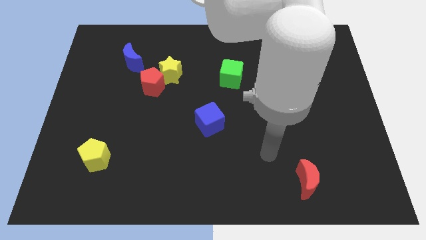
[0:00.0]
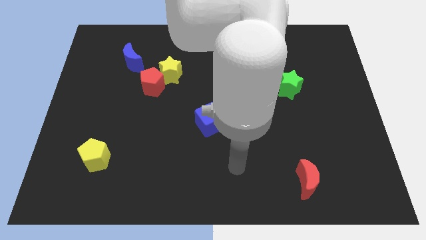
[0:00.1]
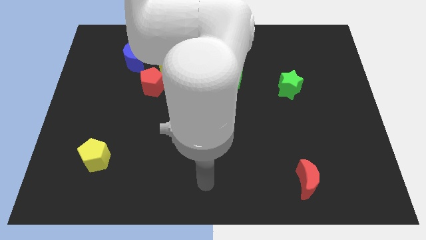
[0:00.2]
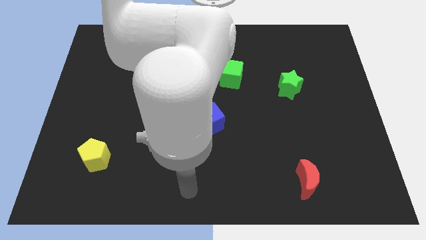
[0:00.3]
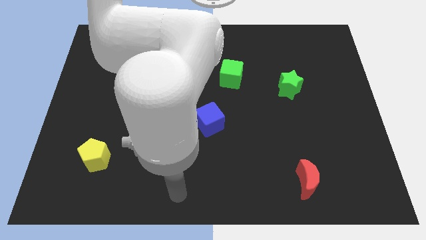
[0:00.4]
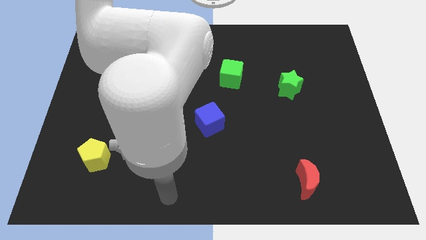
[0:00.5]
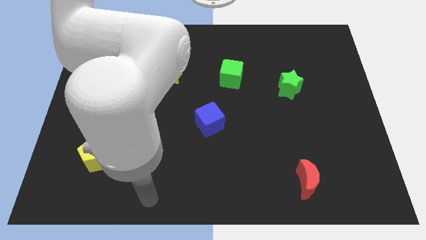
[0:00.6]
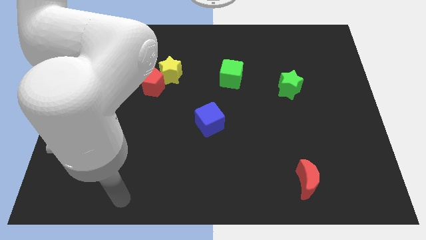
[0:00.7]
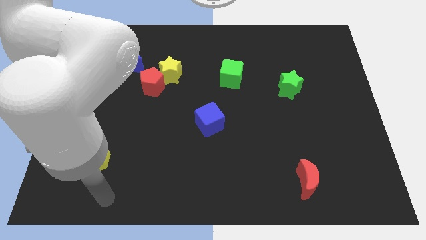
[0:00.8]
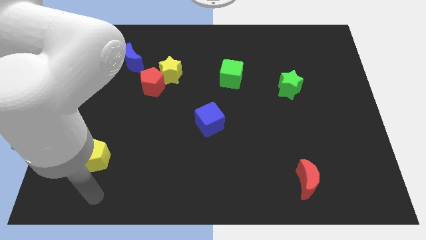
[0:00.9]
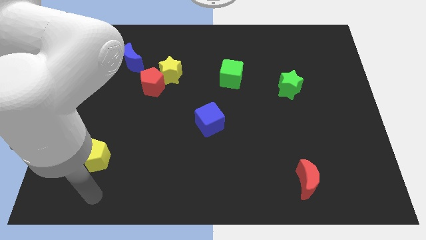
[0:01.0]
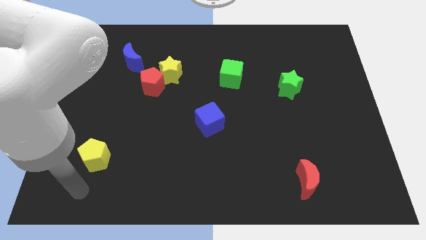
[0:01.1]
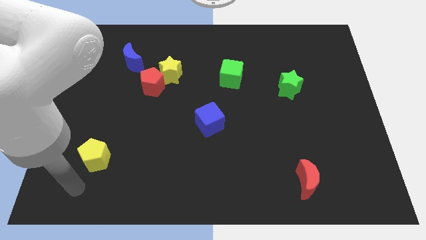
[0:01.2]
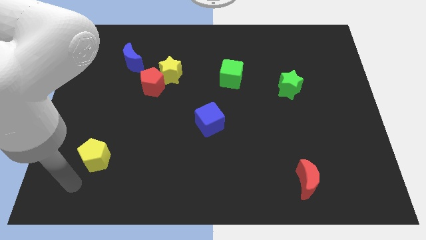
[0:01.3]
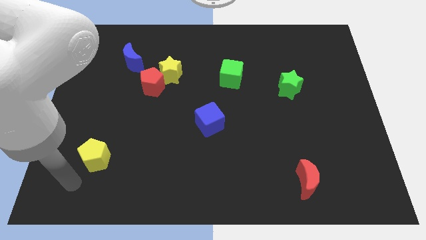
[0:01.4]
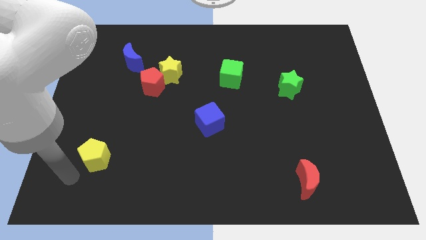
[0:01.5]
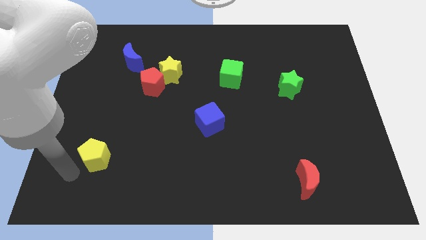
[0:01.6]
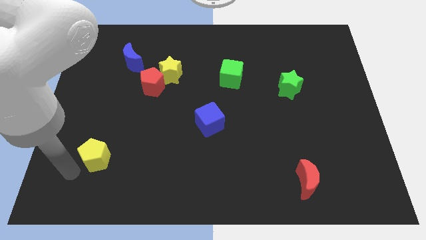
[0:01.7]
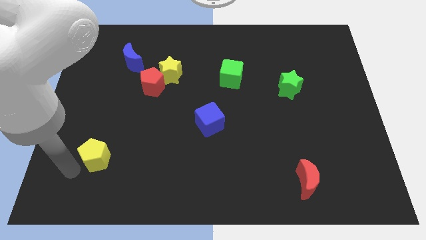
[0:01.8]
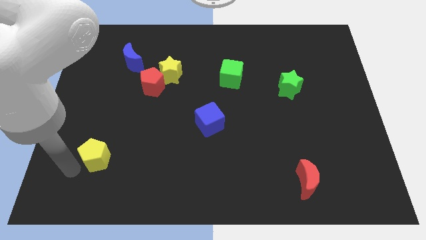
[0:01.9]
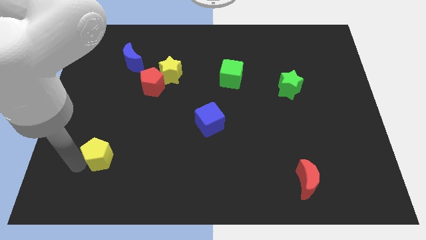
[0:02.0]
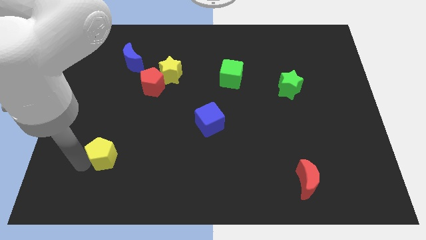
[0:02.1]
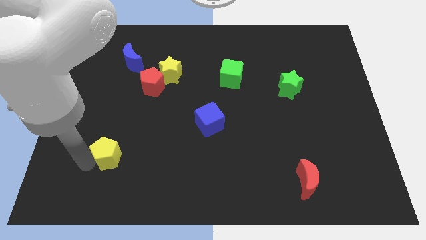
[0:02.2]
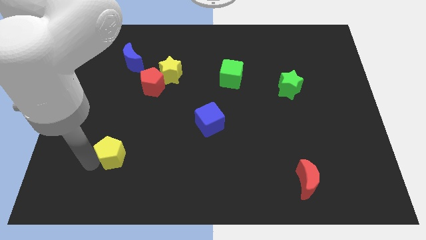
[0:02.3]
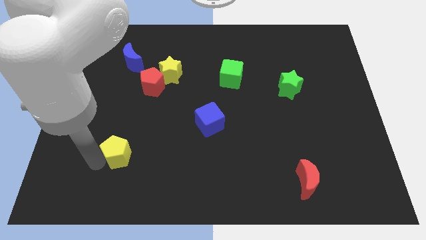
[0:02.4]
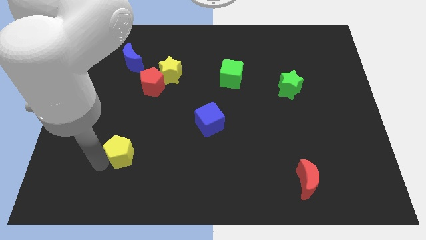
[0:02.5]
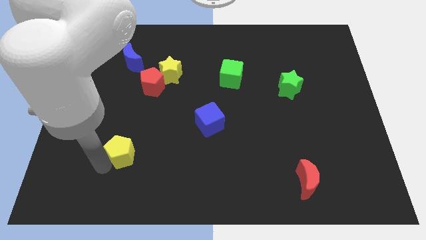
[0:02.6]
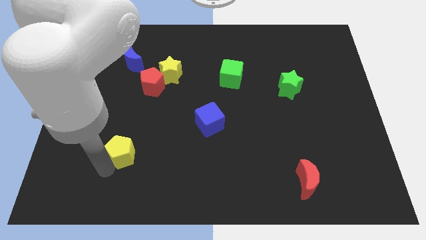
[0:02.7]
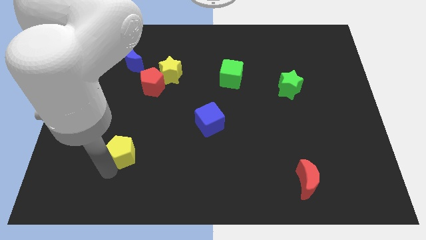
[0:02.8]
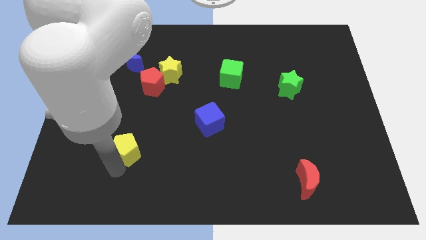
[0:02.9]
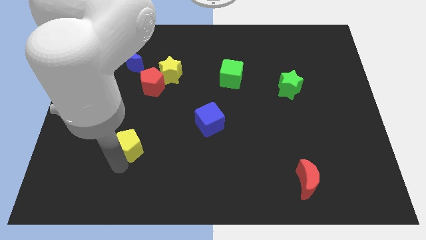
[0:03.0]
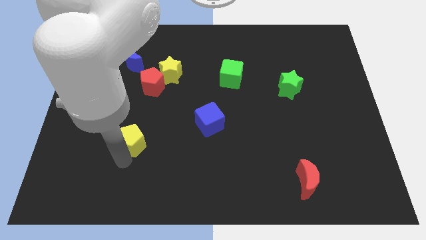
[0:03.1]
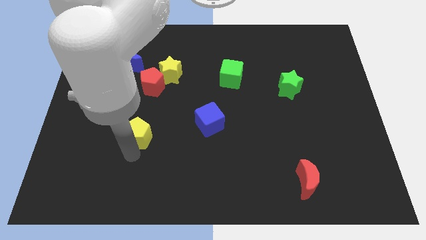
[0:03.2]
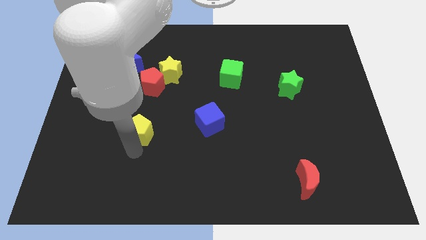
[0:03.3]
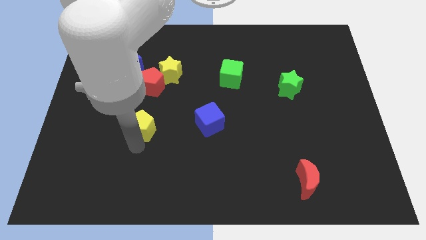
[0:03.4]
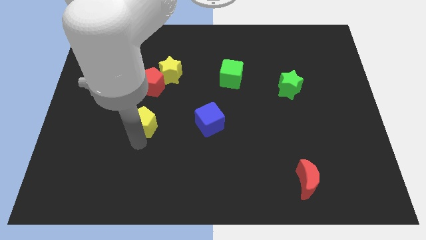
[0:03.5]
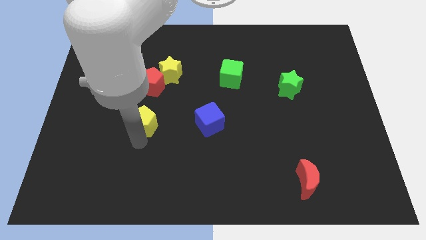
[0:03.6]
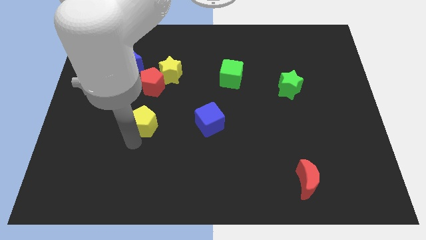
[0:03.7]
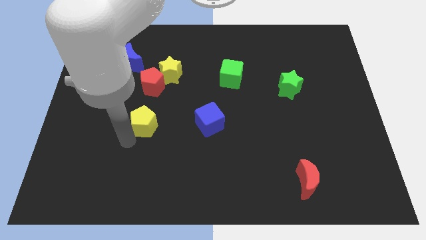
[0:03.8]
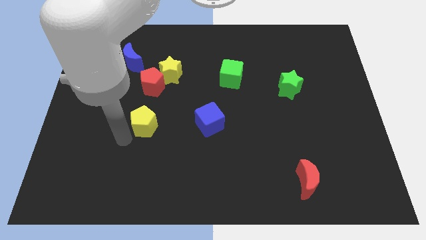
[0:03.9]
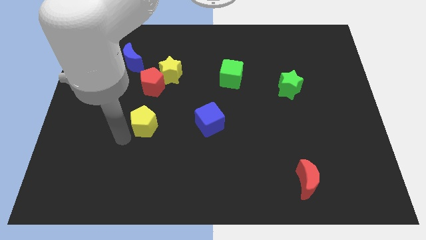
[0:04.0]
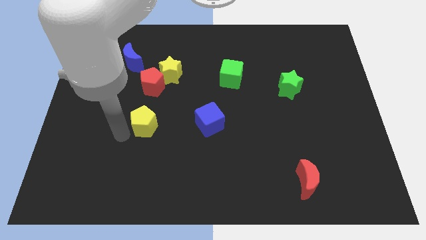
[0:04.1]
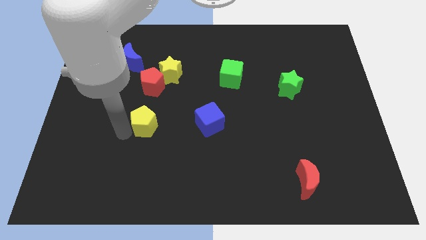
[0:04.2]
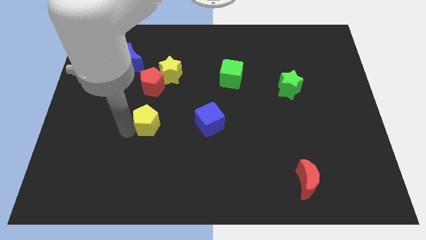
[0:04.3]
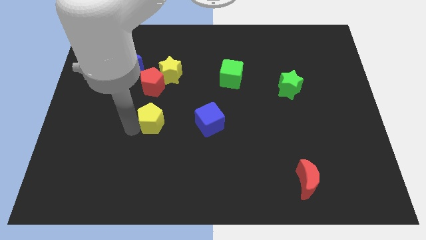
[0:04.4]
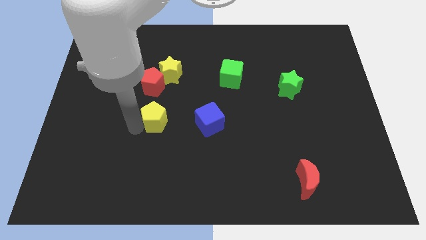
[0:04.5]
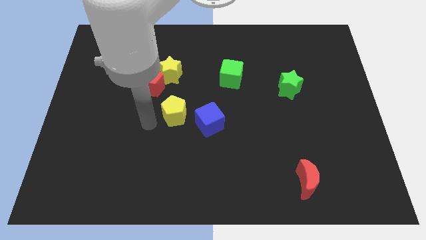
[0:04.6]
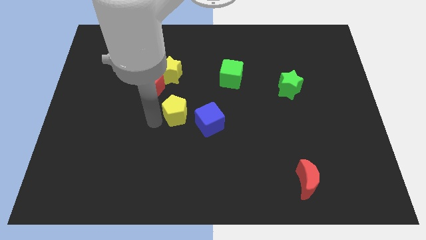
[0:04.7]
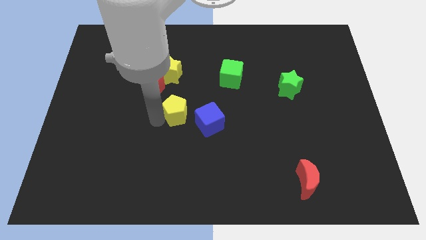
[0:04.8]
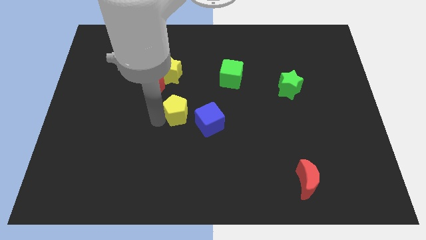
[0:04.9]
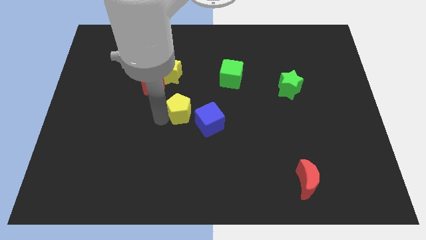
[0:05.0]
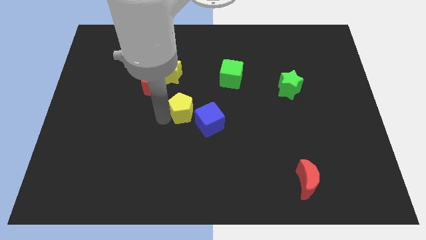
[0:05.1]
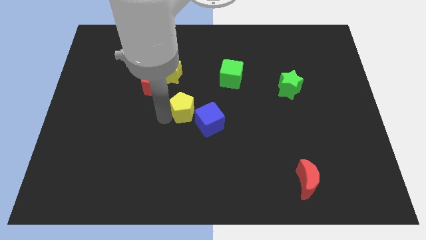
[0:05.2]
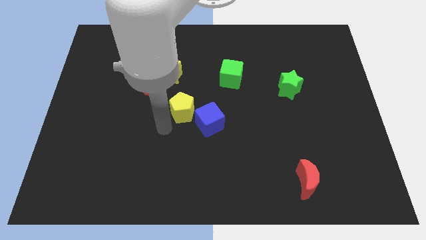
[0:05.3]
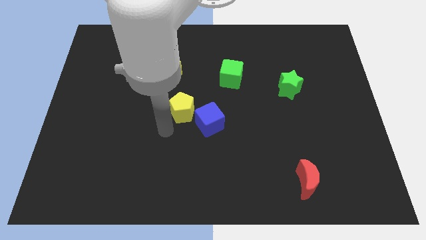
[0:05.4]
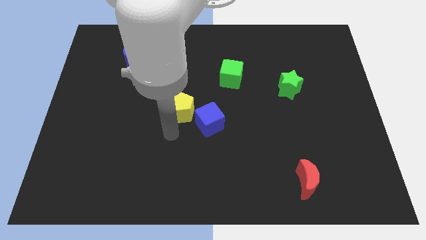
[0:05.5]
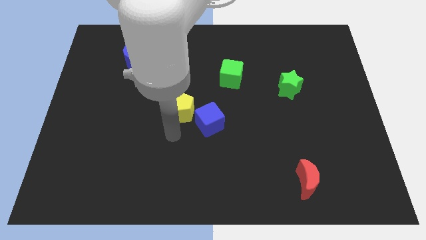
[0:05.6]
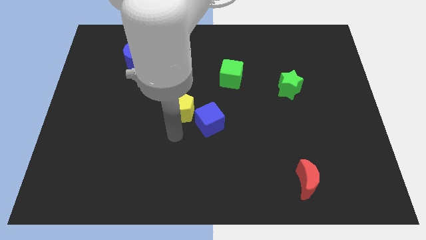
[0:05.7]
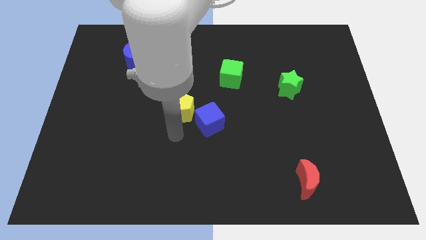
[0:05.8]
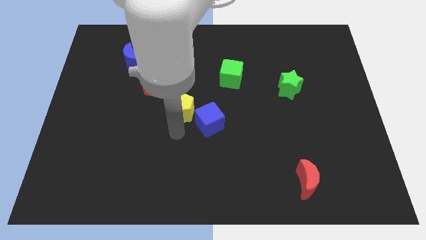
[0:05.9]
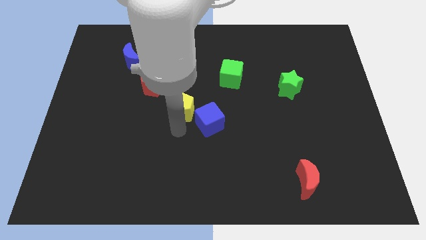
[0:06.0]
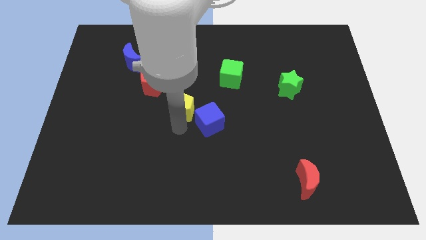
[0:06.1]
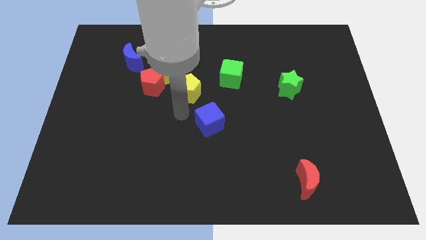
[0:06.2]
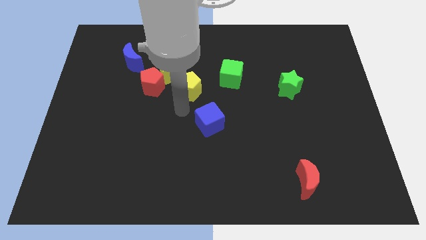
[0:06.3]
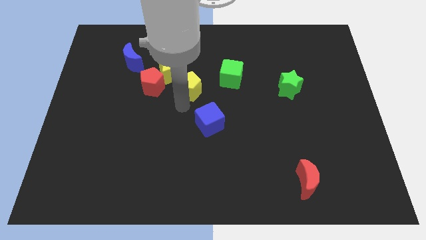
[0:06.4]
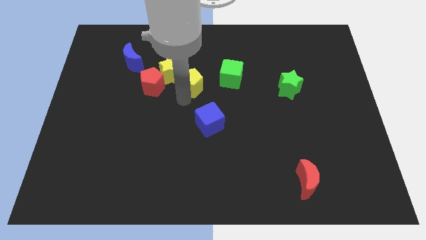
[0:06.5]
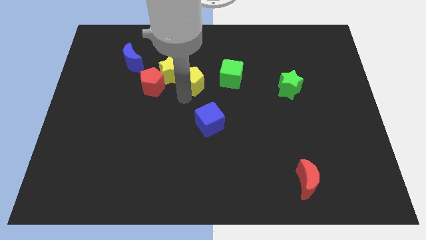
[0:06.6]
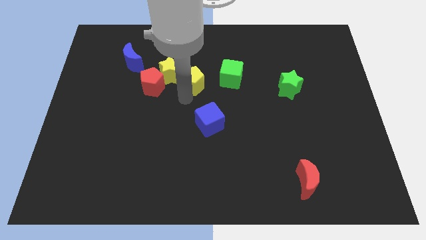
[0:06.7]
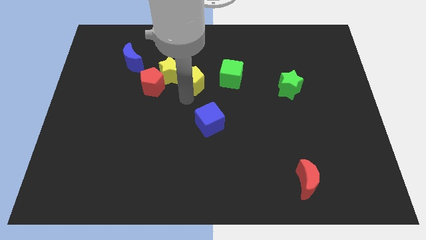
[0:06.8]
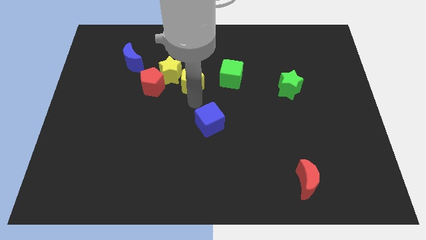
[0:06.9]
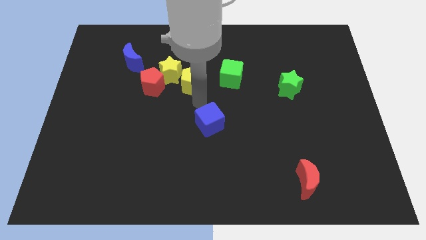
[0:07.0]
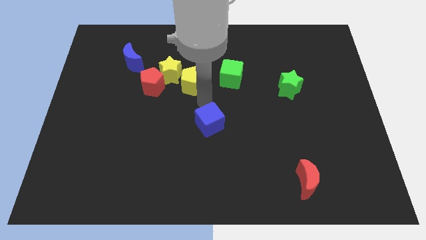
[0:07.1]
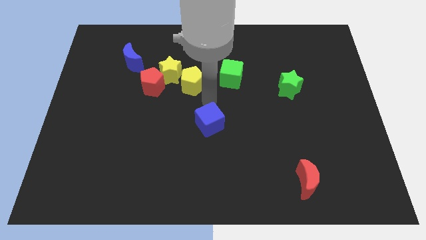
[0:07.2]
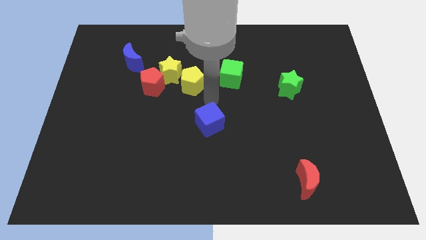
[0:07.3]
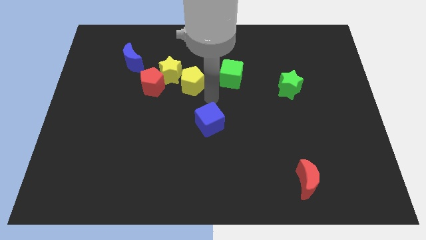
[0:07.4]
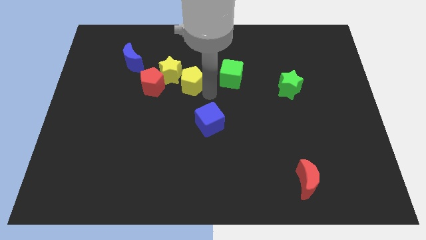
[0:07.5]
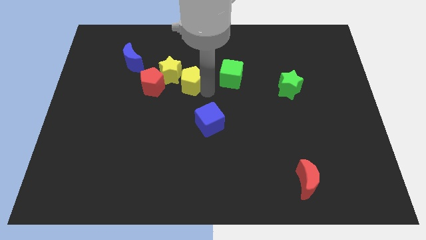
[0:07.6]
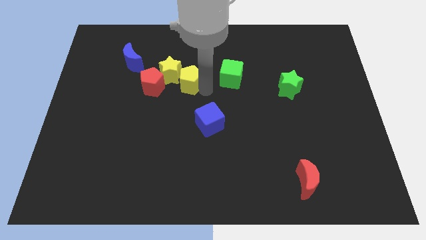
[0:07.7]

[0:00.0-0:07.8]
put the yellow pentagon next to the yellow star

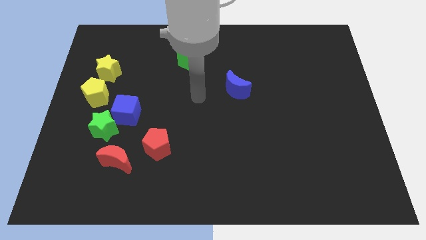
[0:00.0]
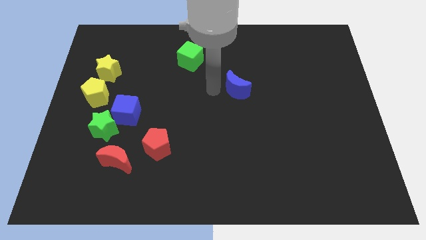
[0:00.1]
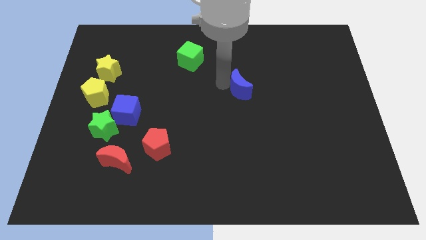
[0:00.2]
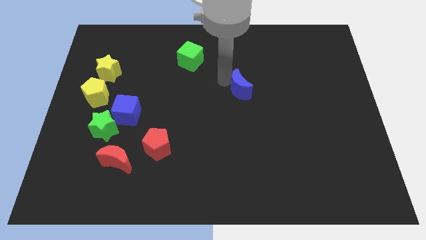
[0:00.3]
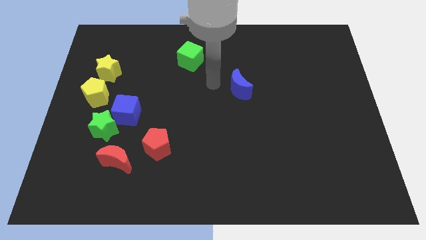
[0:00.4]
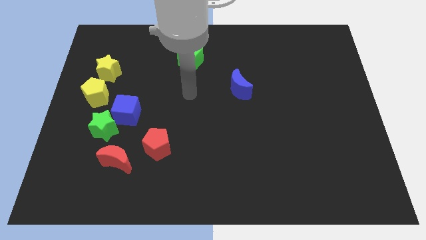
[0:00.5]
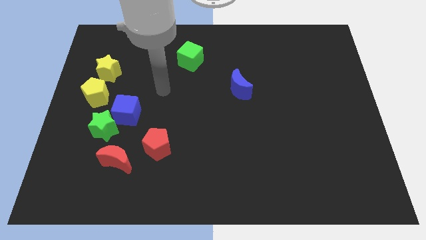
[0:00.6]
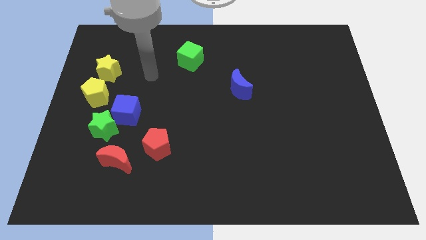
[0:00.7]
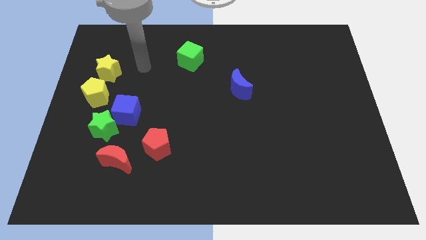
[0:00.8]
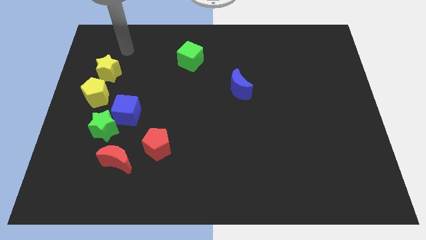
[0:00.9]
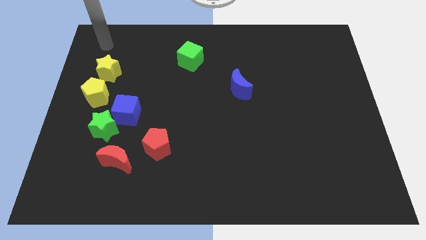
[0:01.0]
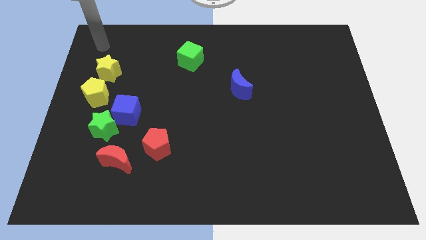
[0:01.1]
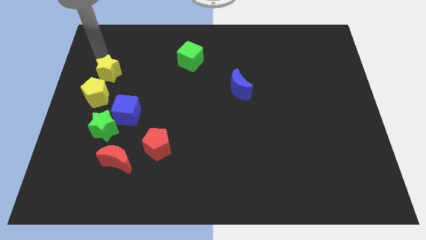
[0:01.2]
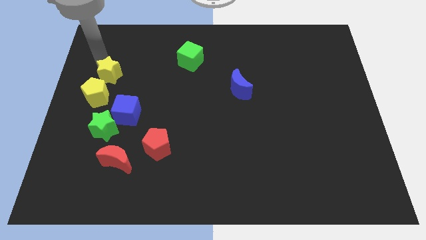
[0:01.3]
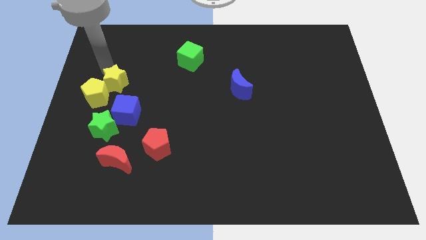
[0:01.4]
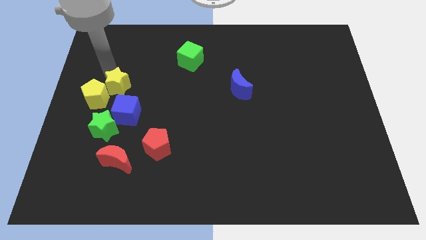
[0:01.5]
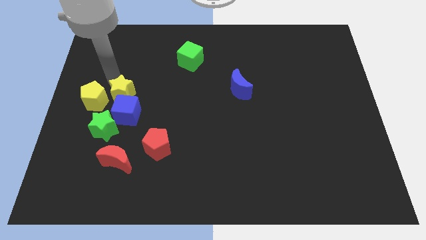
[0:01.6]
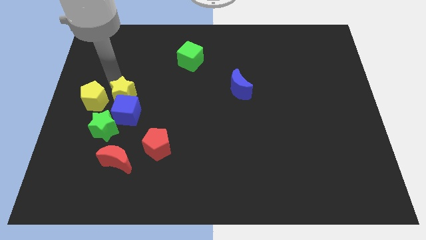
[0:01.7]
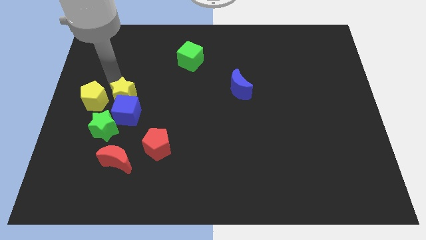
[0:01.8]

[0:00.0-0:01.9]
slide the yellow star towards the blue cube
